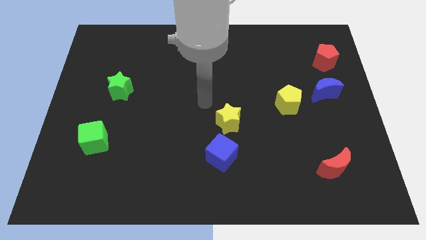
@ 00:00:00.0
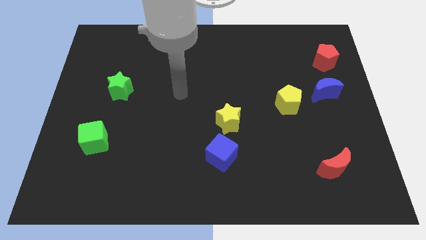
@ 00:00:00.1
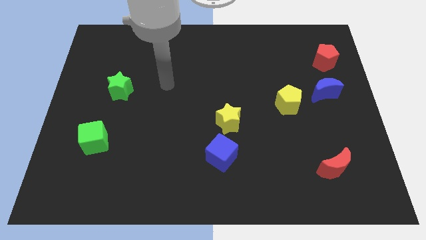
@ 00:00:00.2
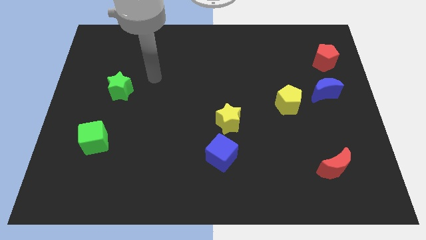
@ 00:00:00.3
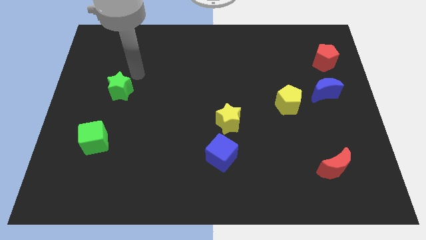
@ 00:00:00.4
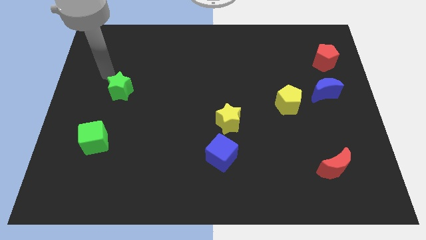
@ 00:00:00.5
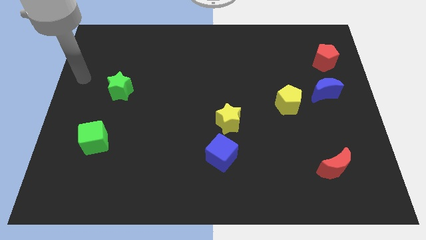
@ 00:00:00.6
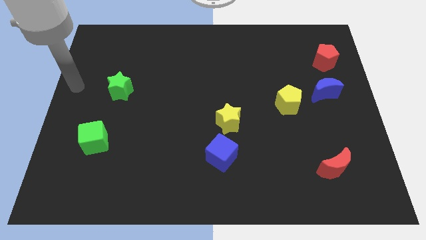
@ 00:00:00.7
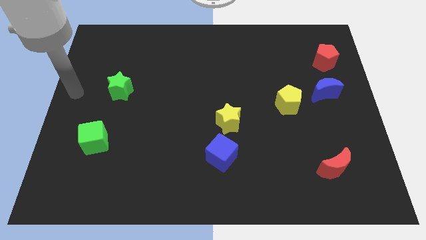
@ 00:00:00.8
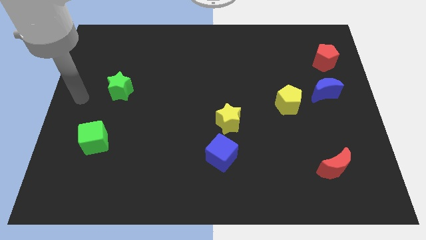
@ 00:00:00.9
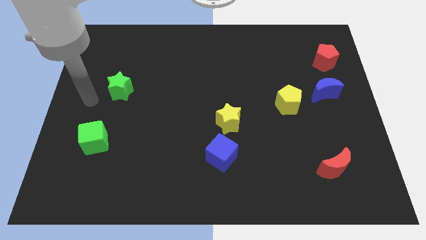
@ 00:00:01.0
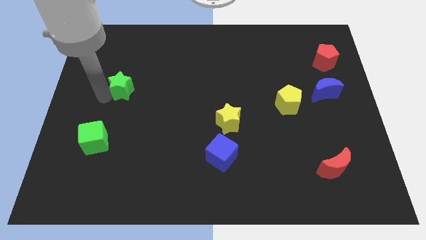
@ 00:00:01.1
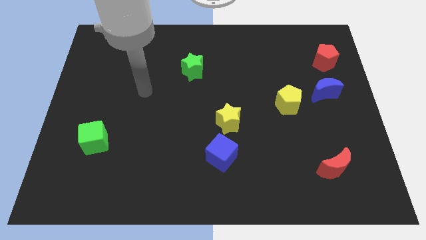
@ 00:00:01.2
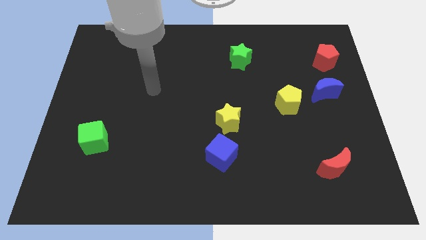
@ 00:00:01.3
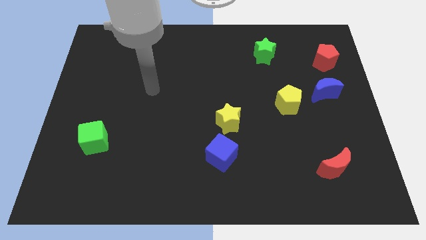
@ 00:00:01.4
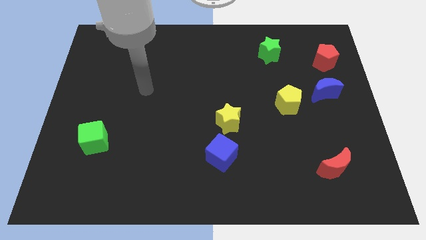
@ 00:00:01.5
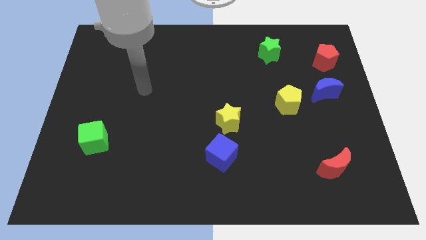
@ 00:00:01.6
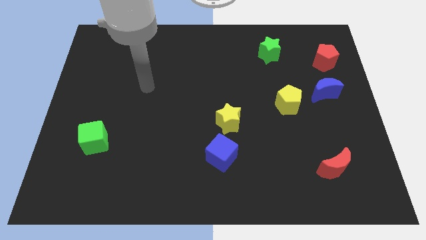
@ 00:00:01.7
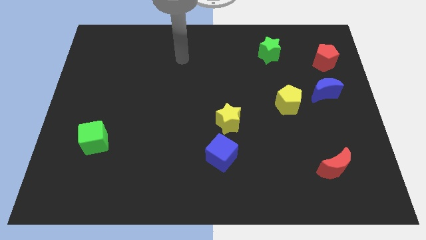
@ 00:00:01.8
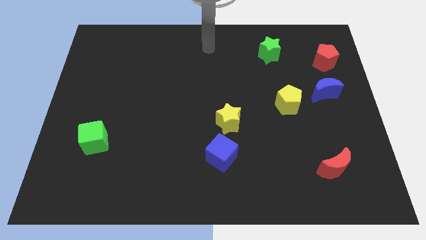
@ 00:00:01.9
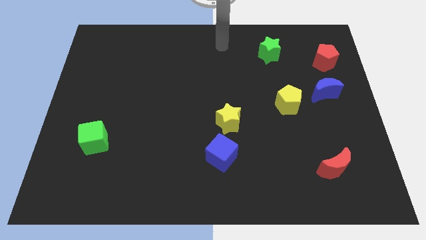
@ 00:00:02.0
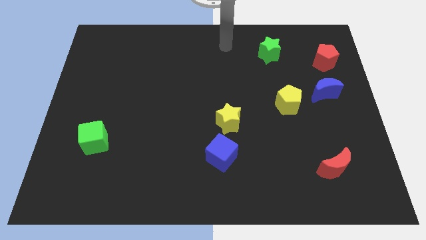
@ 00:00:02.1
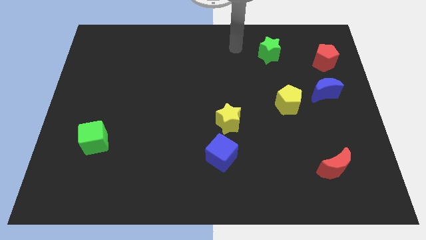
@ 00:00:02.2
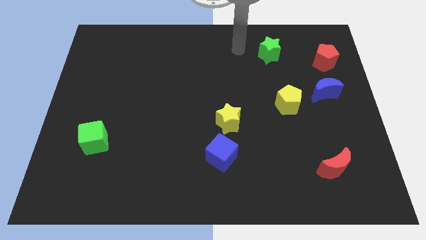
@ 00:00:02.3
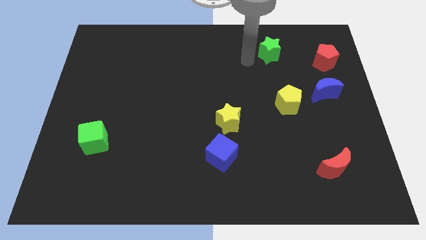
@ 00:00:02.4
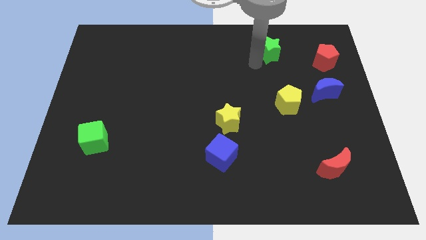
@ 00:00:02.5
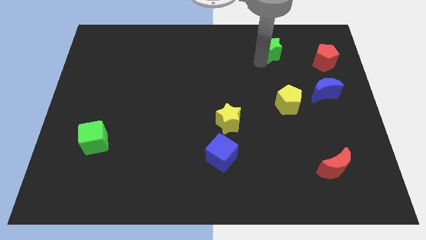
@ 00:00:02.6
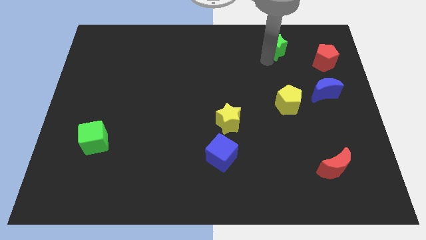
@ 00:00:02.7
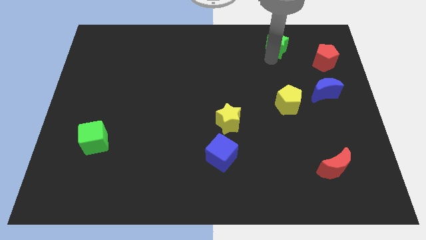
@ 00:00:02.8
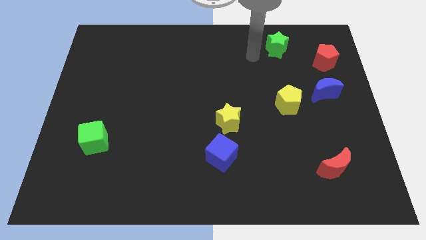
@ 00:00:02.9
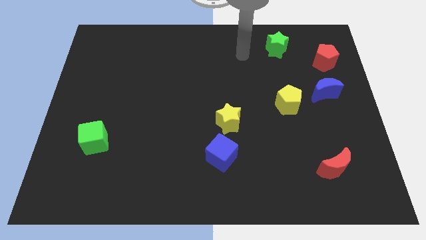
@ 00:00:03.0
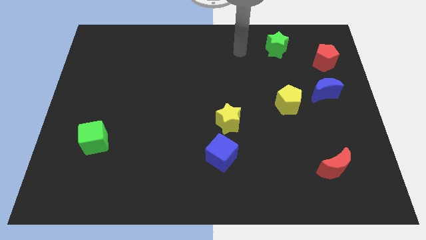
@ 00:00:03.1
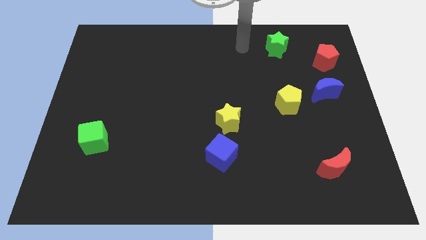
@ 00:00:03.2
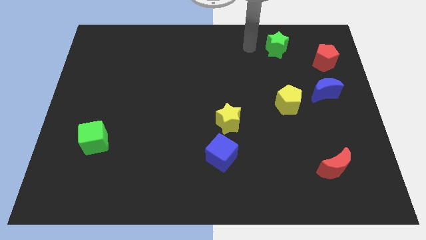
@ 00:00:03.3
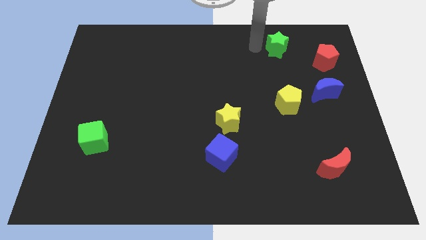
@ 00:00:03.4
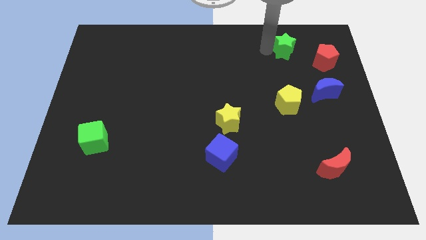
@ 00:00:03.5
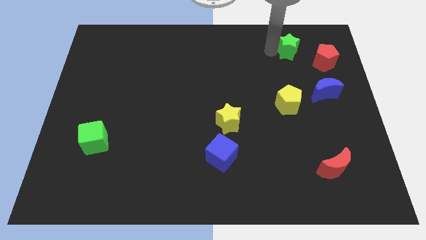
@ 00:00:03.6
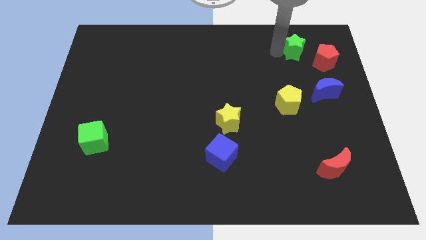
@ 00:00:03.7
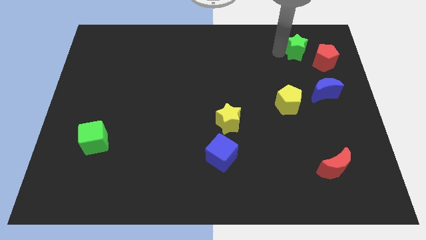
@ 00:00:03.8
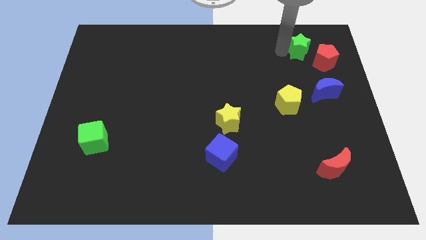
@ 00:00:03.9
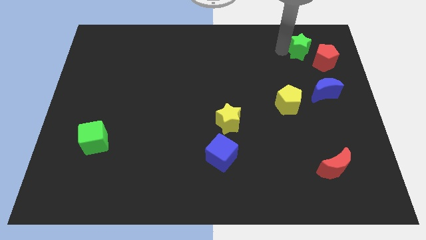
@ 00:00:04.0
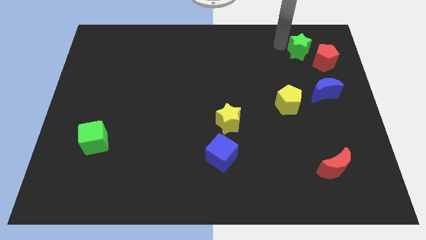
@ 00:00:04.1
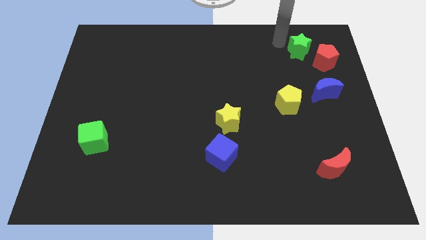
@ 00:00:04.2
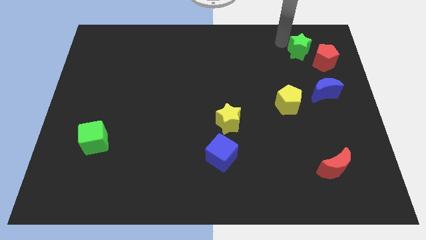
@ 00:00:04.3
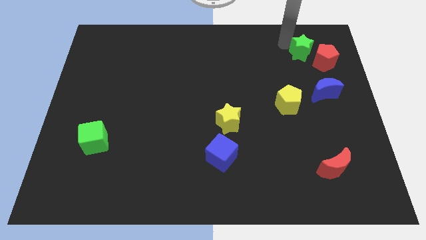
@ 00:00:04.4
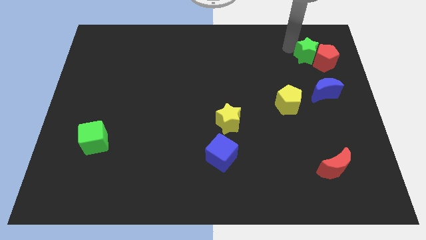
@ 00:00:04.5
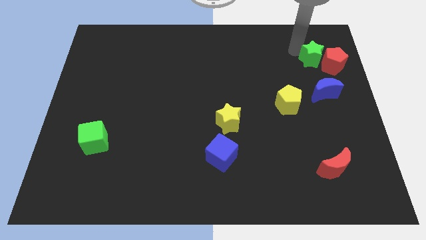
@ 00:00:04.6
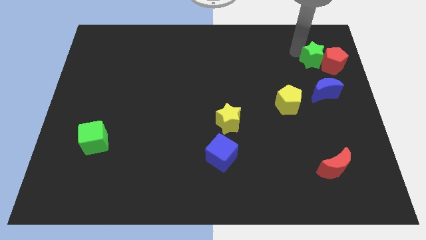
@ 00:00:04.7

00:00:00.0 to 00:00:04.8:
move the green star to the red pentagon

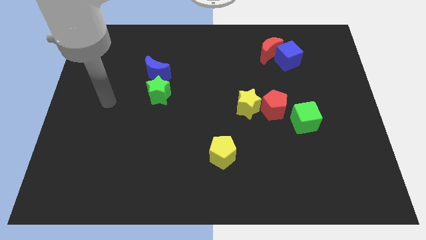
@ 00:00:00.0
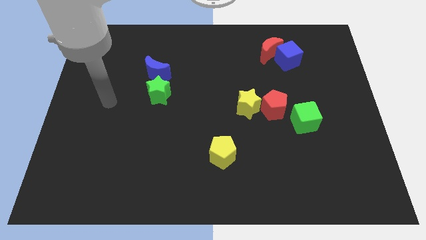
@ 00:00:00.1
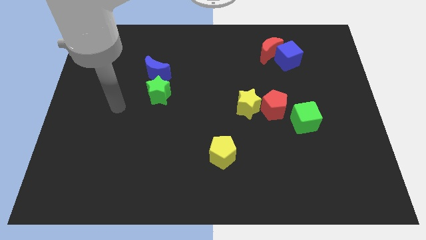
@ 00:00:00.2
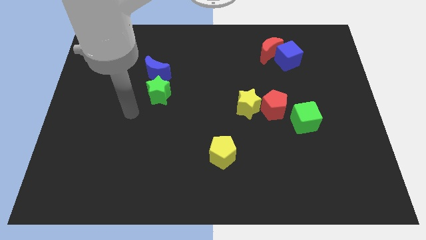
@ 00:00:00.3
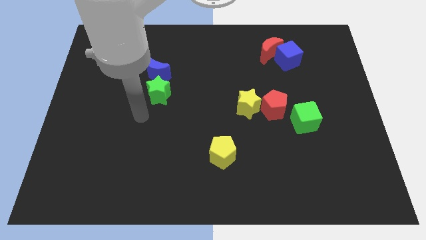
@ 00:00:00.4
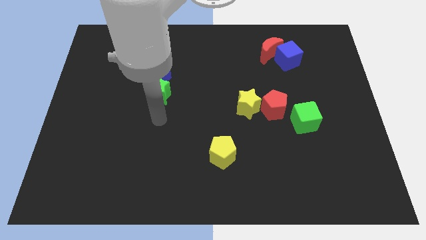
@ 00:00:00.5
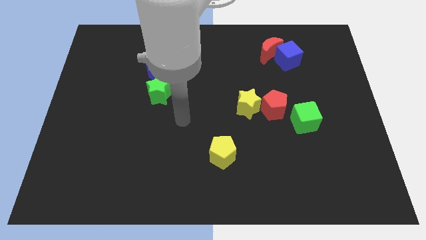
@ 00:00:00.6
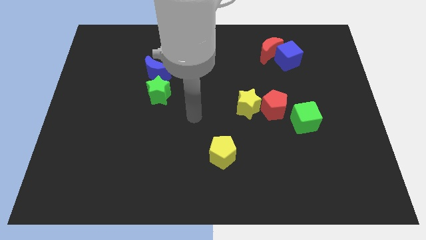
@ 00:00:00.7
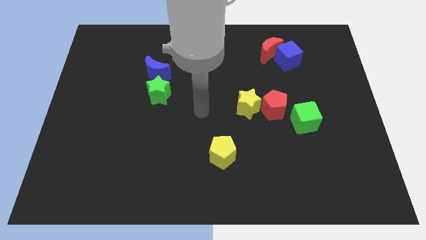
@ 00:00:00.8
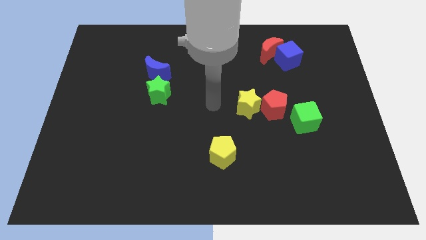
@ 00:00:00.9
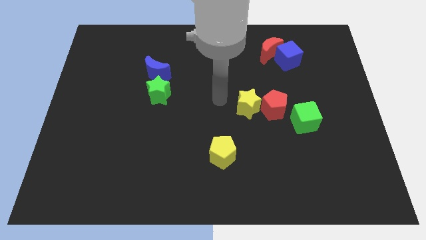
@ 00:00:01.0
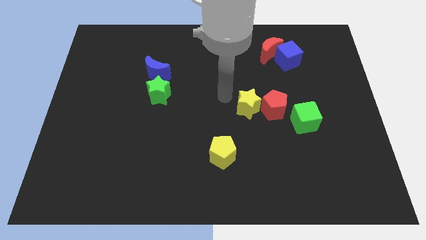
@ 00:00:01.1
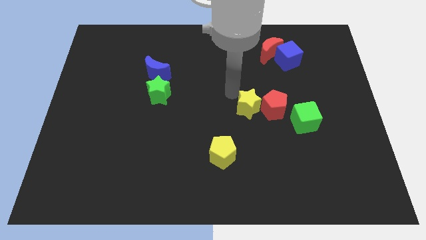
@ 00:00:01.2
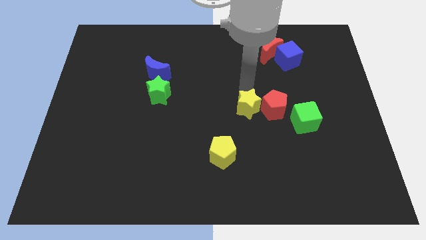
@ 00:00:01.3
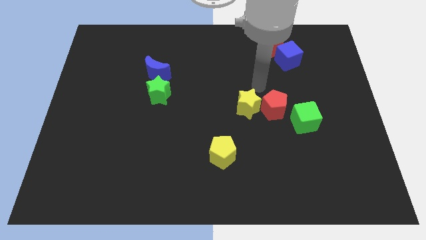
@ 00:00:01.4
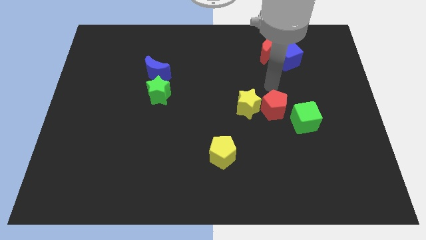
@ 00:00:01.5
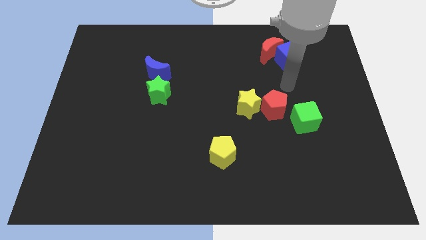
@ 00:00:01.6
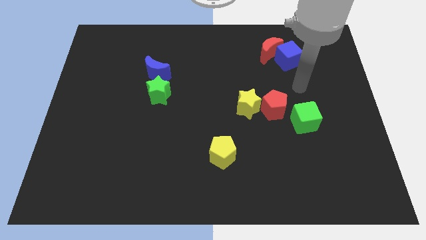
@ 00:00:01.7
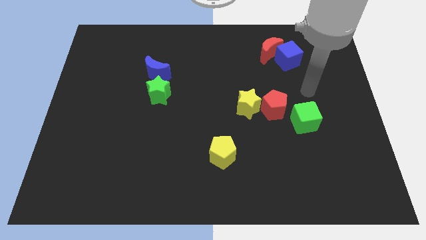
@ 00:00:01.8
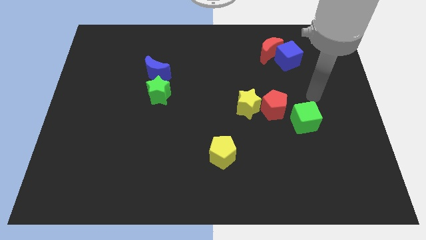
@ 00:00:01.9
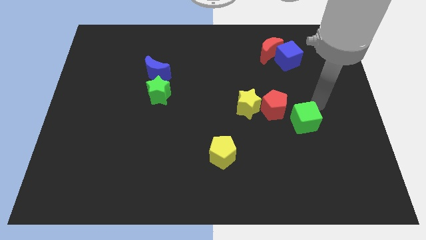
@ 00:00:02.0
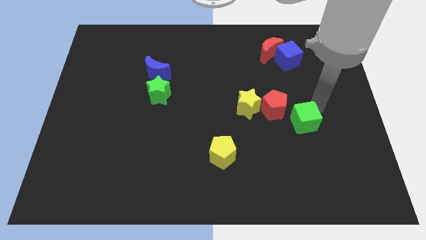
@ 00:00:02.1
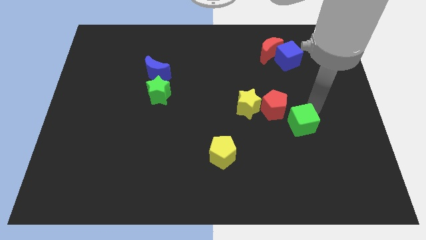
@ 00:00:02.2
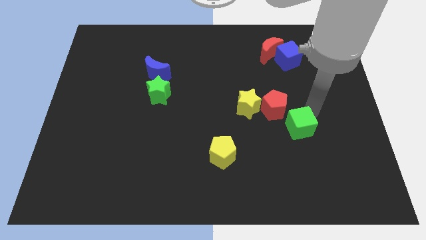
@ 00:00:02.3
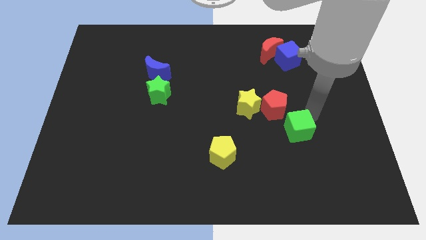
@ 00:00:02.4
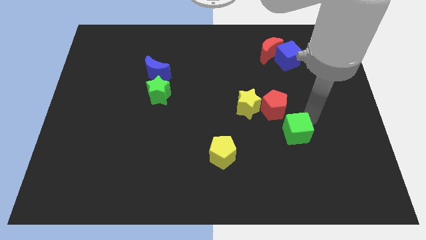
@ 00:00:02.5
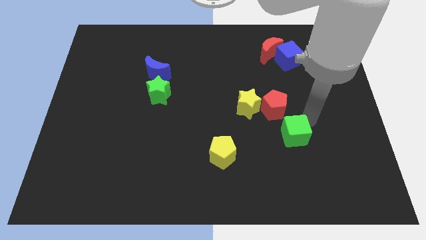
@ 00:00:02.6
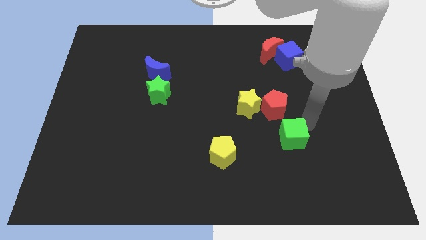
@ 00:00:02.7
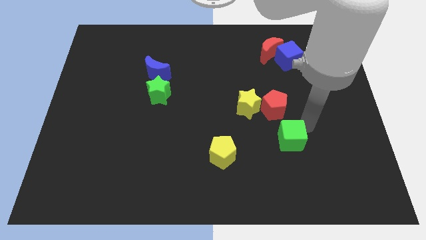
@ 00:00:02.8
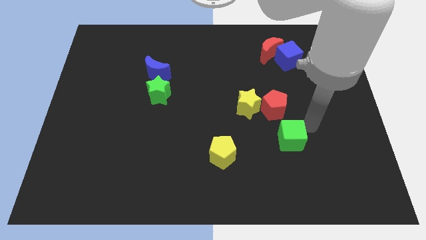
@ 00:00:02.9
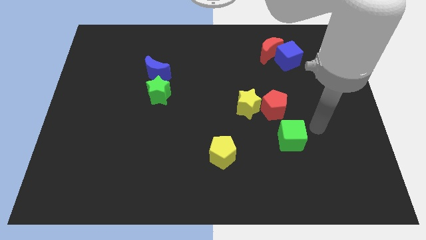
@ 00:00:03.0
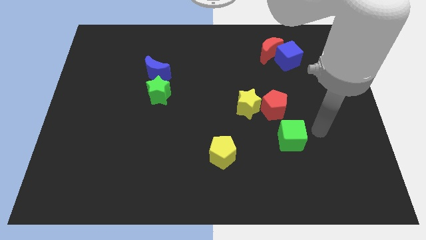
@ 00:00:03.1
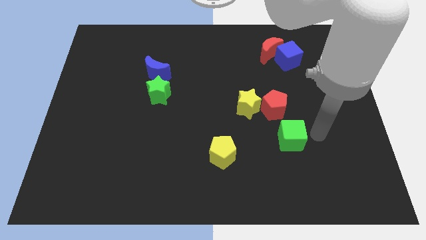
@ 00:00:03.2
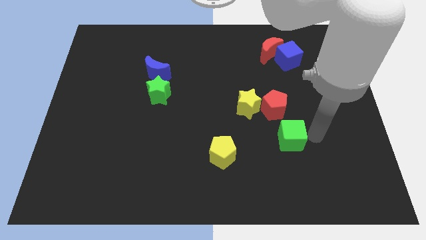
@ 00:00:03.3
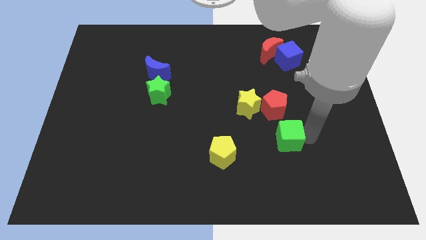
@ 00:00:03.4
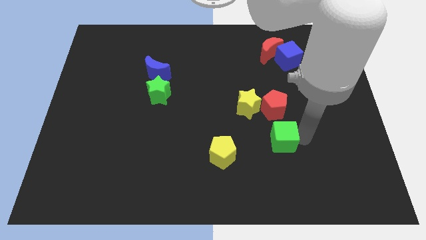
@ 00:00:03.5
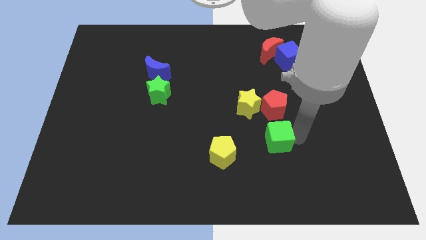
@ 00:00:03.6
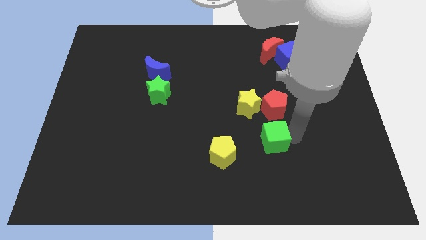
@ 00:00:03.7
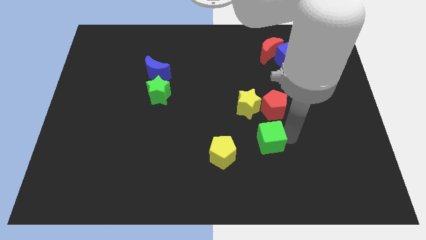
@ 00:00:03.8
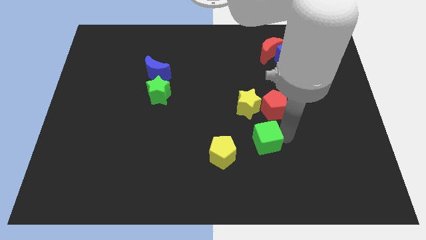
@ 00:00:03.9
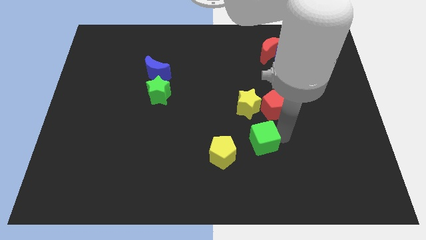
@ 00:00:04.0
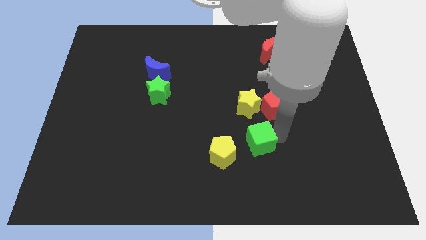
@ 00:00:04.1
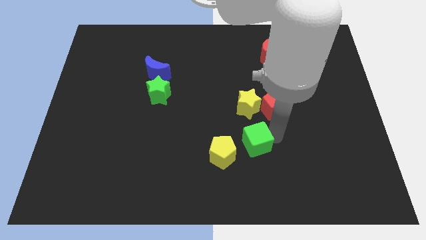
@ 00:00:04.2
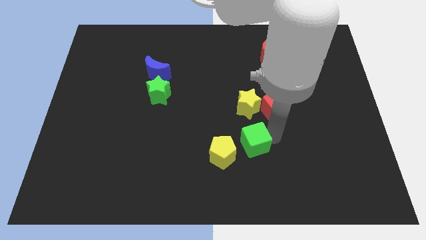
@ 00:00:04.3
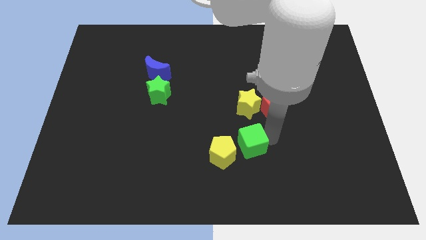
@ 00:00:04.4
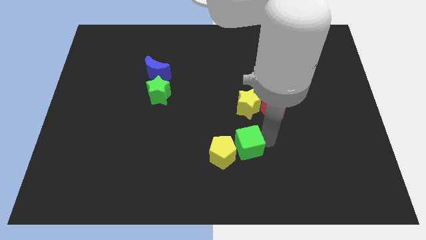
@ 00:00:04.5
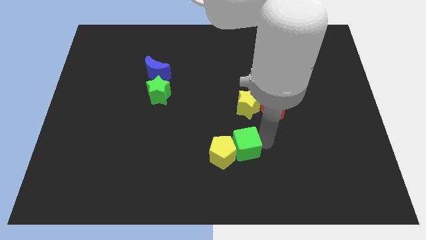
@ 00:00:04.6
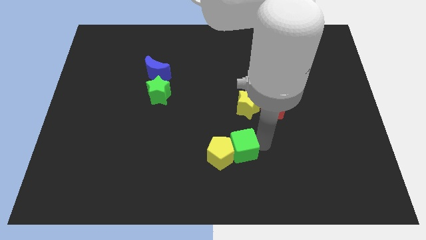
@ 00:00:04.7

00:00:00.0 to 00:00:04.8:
push the green cube towards the yellow pentagon
